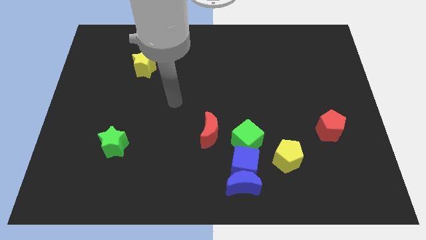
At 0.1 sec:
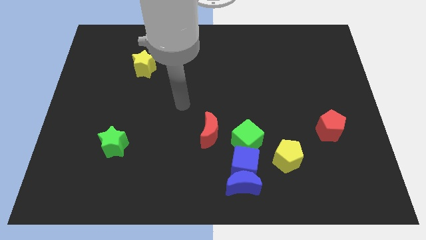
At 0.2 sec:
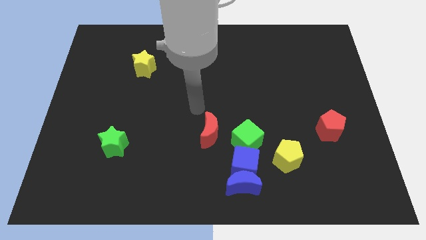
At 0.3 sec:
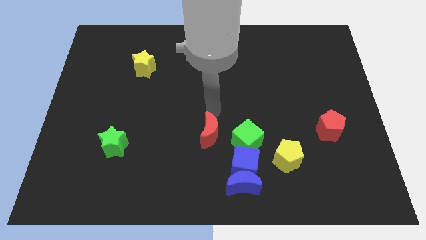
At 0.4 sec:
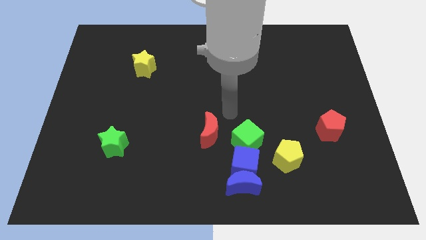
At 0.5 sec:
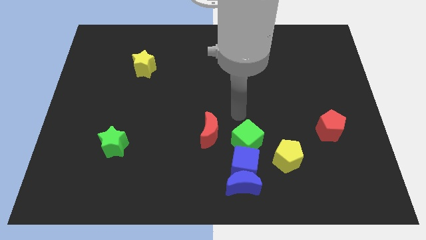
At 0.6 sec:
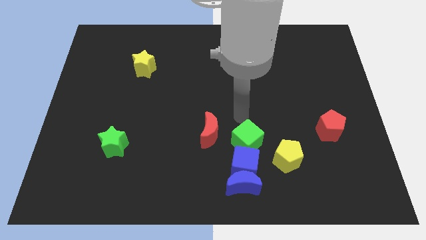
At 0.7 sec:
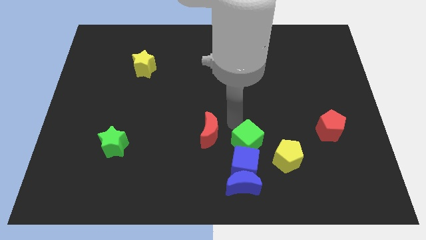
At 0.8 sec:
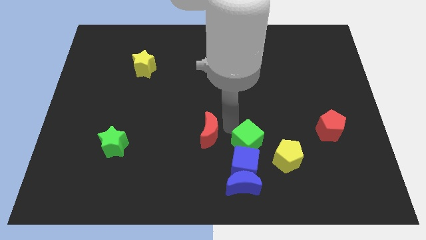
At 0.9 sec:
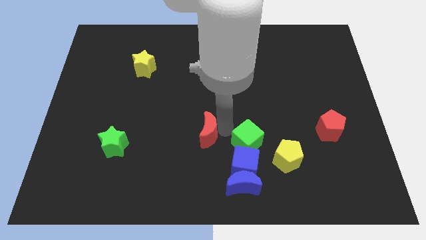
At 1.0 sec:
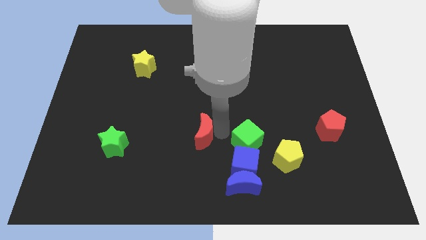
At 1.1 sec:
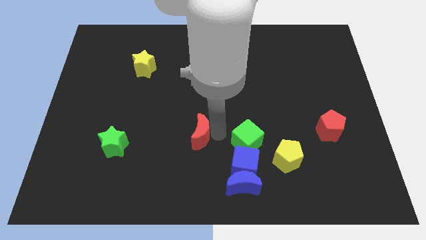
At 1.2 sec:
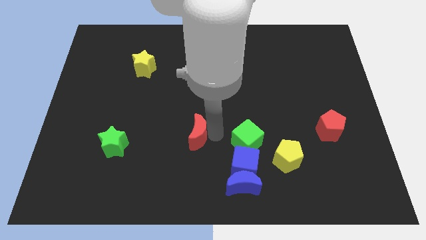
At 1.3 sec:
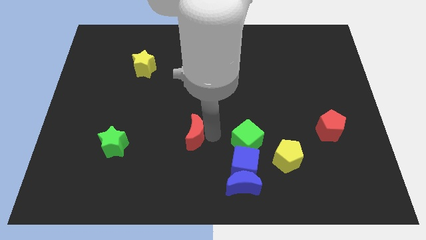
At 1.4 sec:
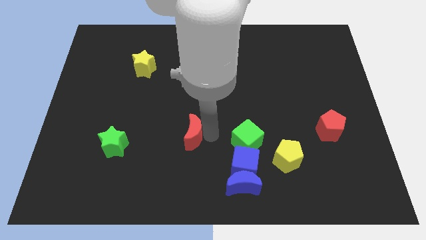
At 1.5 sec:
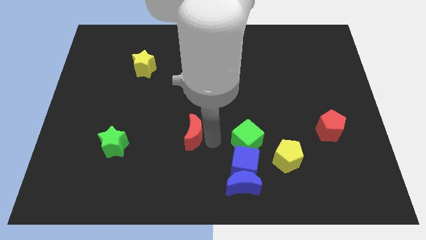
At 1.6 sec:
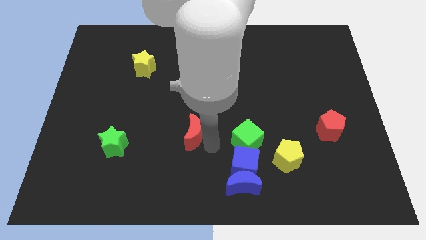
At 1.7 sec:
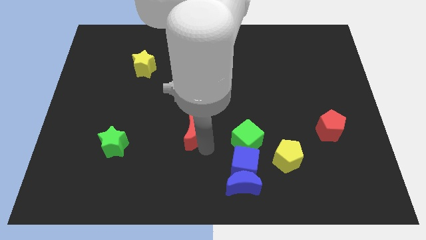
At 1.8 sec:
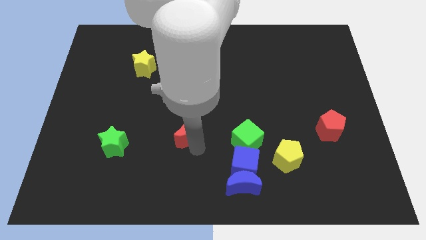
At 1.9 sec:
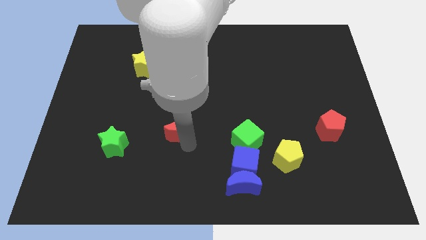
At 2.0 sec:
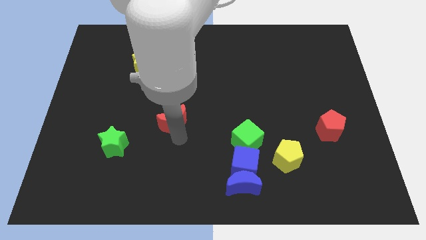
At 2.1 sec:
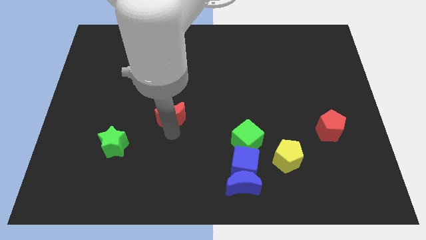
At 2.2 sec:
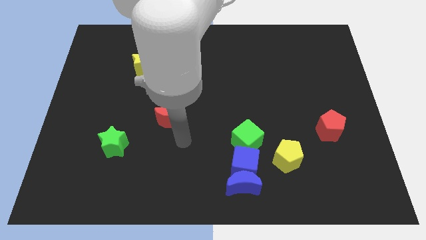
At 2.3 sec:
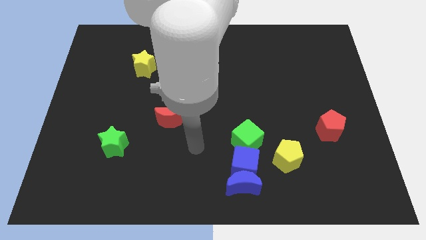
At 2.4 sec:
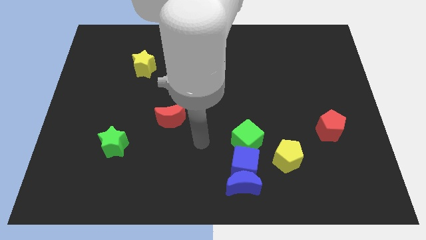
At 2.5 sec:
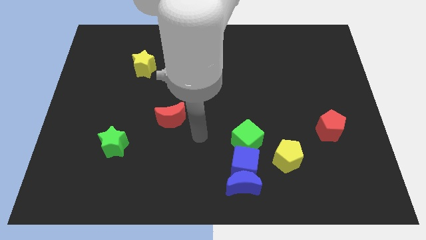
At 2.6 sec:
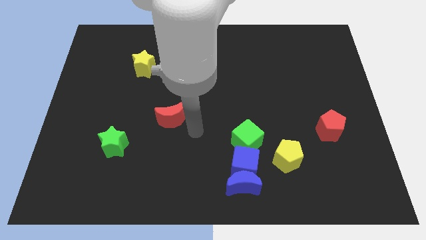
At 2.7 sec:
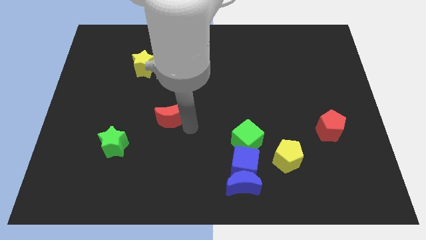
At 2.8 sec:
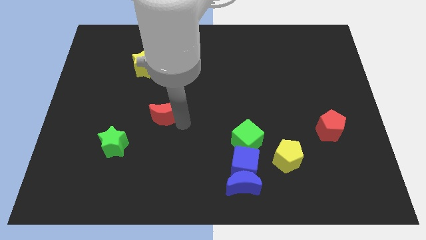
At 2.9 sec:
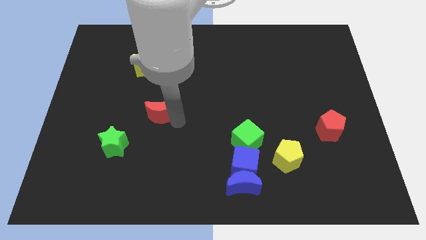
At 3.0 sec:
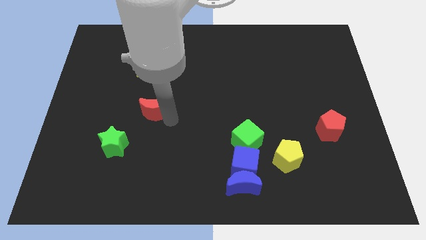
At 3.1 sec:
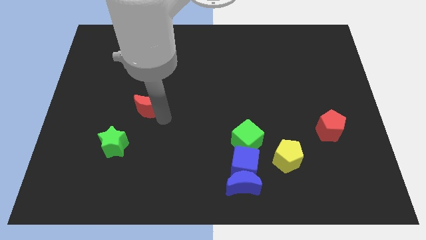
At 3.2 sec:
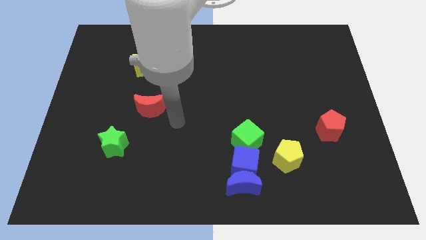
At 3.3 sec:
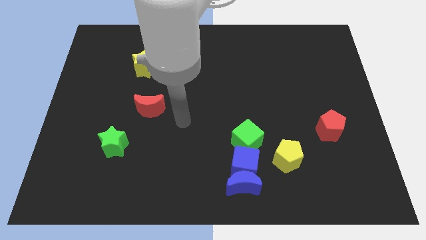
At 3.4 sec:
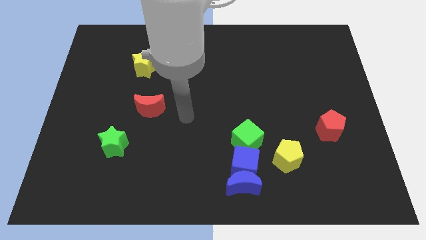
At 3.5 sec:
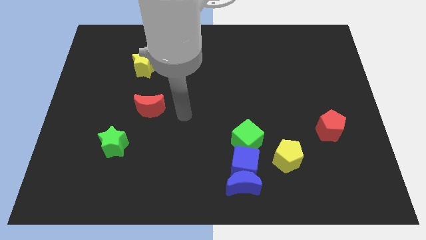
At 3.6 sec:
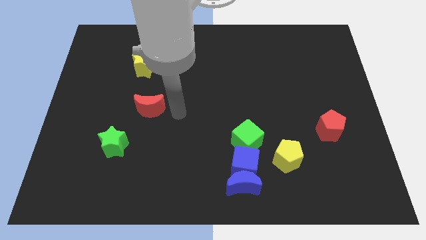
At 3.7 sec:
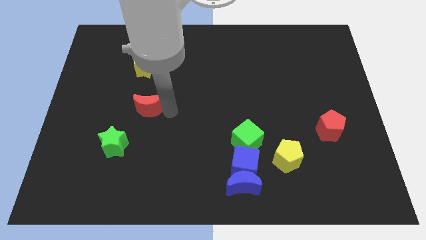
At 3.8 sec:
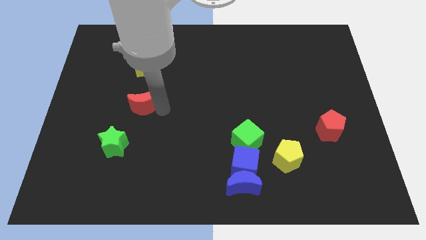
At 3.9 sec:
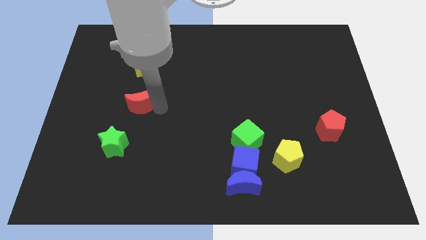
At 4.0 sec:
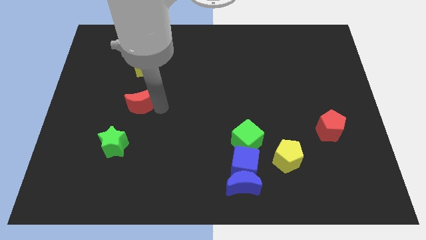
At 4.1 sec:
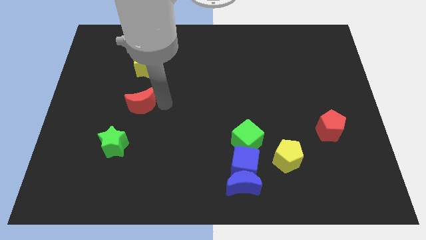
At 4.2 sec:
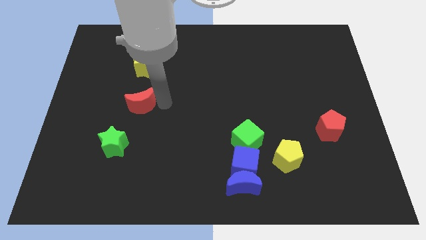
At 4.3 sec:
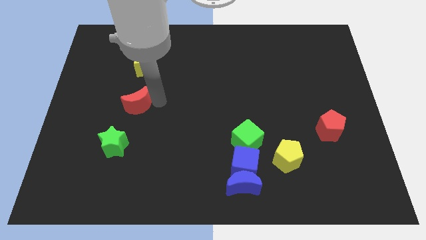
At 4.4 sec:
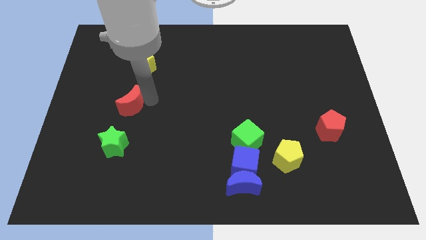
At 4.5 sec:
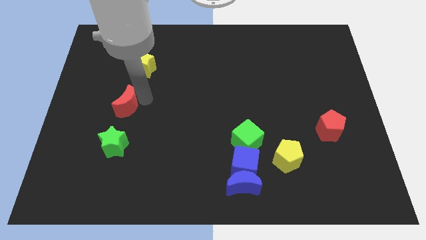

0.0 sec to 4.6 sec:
place the red moon in between yellow star and green star

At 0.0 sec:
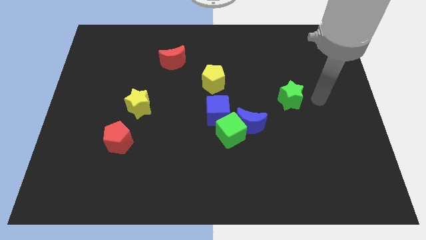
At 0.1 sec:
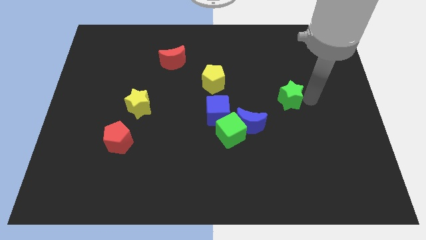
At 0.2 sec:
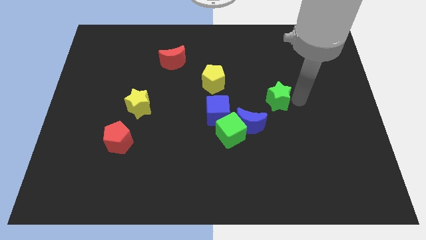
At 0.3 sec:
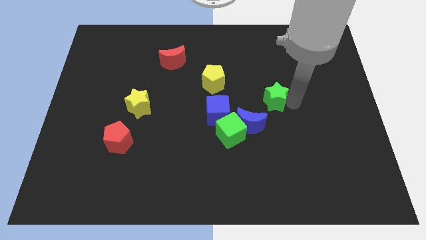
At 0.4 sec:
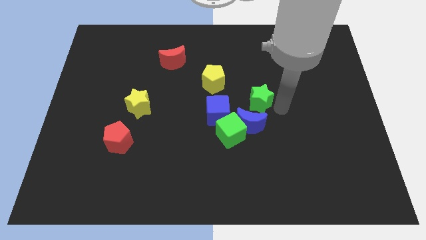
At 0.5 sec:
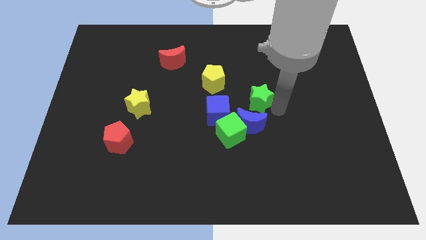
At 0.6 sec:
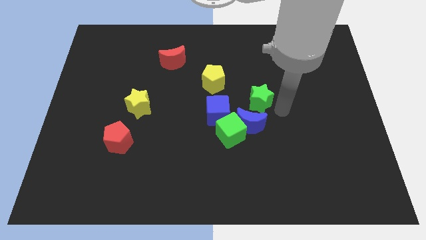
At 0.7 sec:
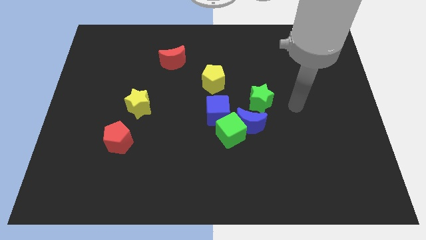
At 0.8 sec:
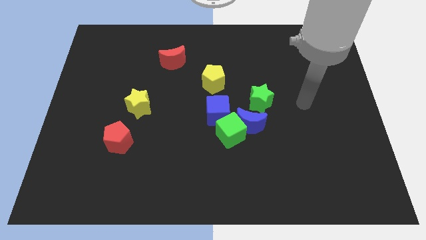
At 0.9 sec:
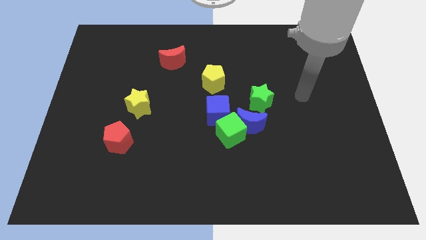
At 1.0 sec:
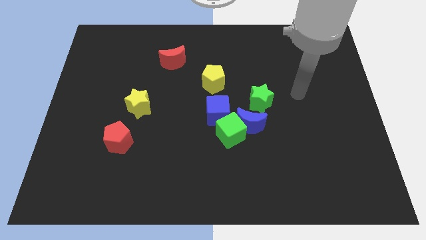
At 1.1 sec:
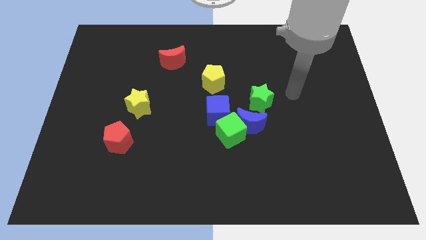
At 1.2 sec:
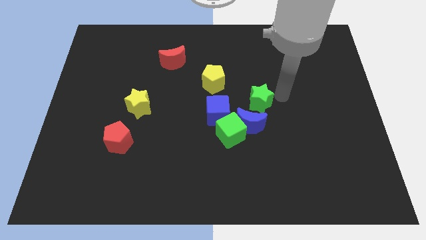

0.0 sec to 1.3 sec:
place the green star to the group of blocks

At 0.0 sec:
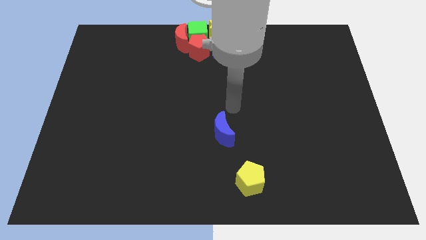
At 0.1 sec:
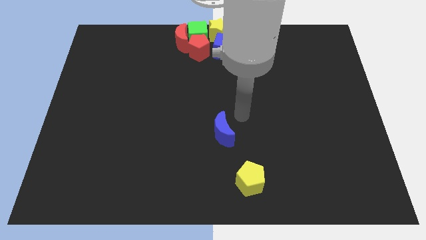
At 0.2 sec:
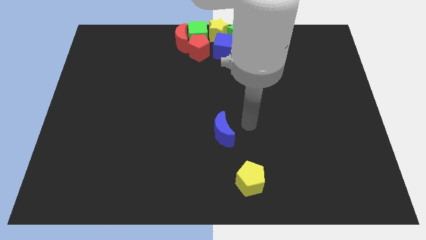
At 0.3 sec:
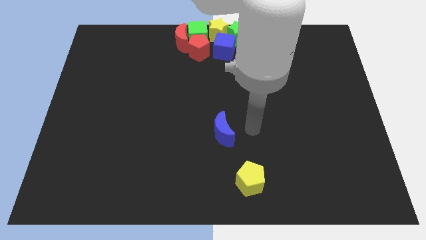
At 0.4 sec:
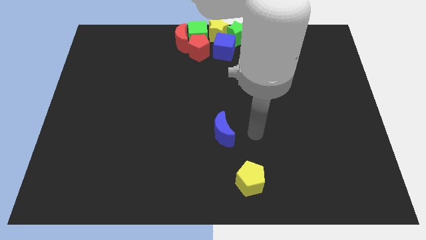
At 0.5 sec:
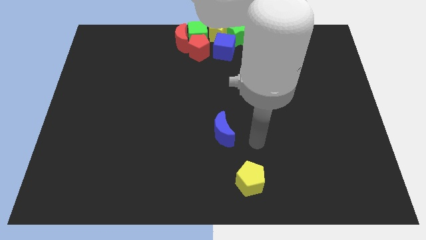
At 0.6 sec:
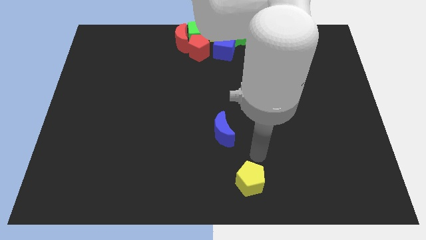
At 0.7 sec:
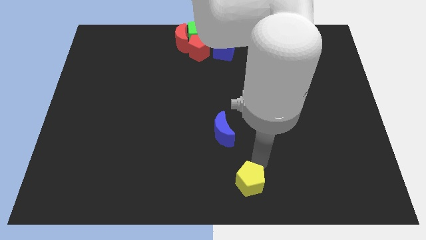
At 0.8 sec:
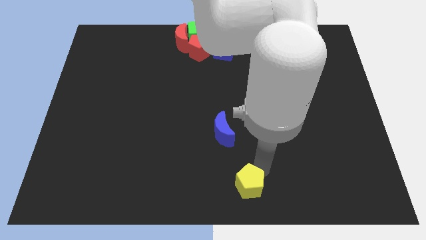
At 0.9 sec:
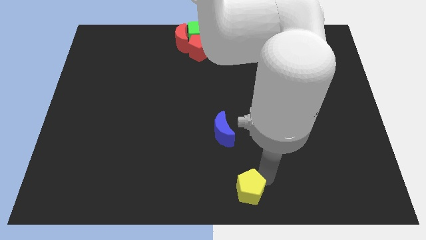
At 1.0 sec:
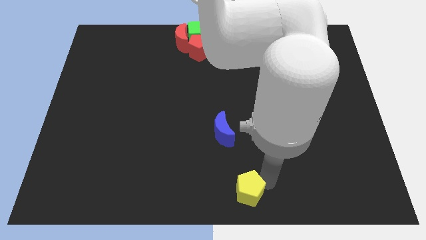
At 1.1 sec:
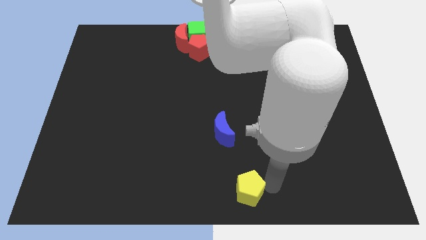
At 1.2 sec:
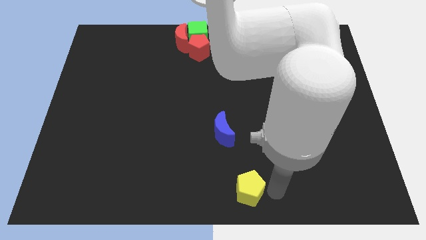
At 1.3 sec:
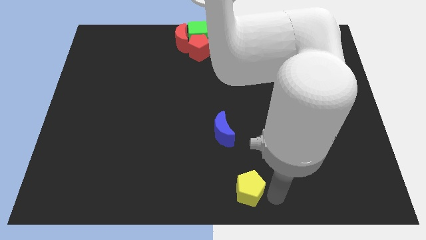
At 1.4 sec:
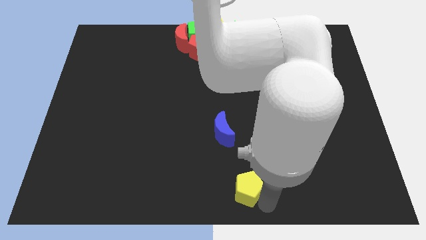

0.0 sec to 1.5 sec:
slide the yellow pentagon diagonally on the bottom right side of the blue crescent

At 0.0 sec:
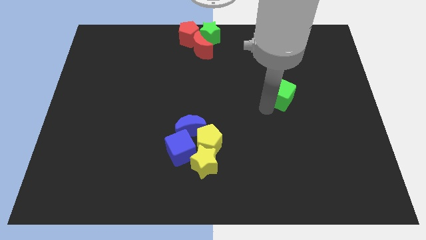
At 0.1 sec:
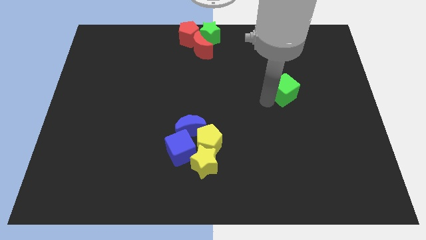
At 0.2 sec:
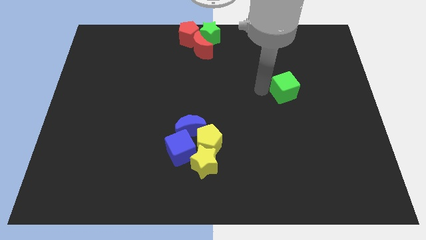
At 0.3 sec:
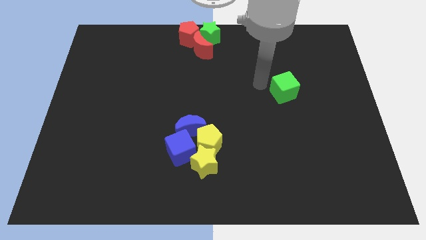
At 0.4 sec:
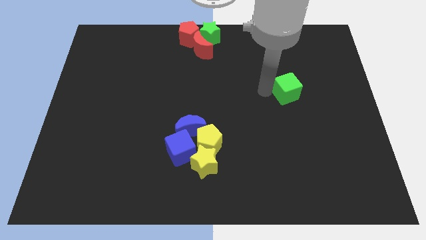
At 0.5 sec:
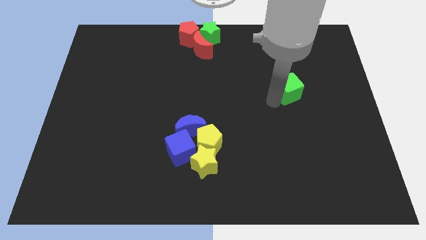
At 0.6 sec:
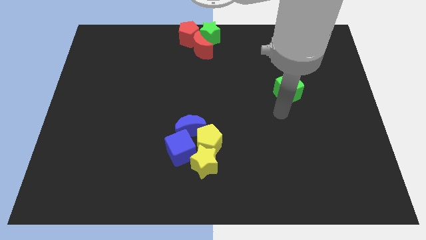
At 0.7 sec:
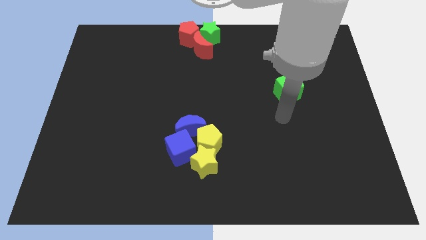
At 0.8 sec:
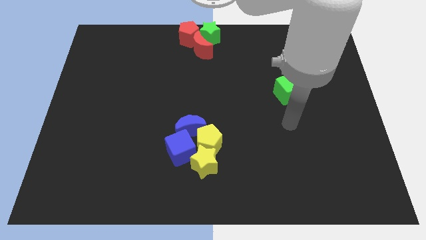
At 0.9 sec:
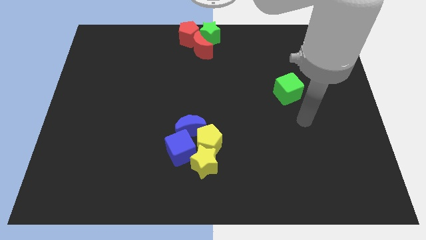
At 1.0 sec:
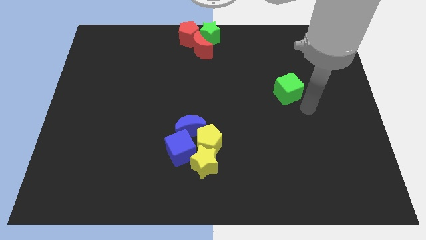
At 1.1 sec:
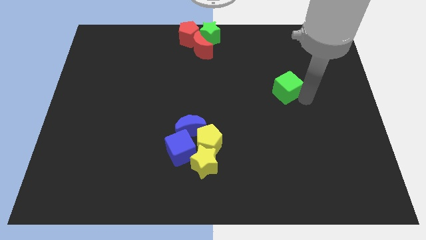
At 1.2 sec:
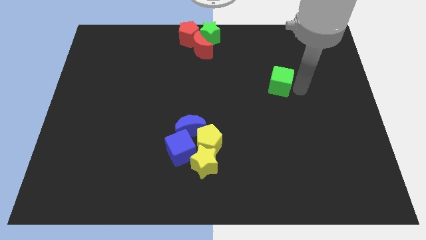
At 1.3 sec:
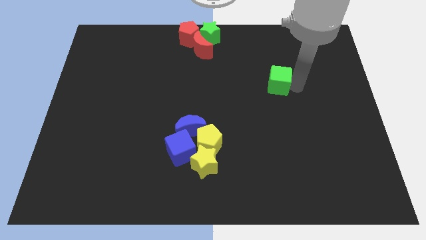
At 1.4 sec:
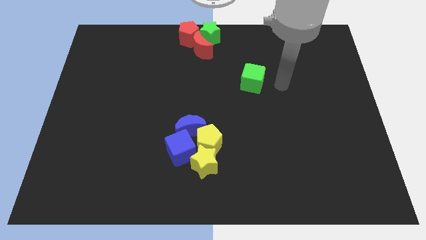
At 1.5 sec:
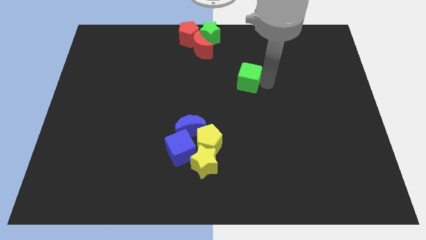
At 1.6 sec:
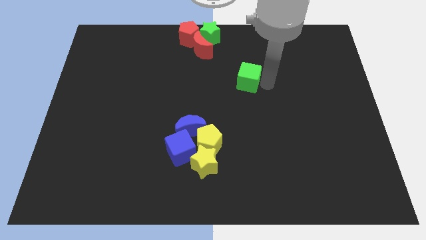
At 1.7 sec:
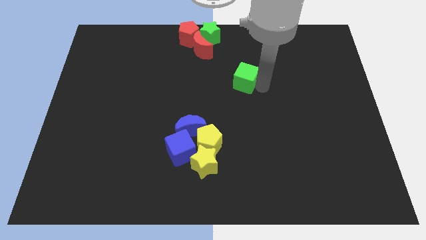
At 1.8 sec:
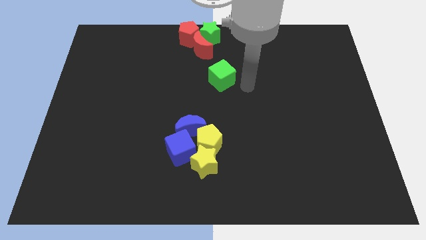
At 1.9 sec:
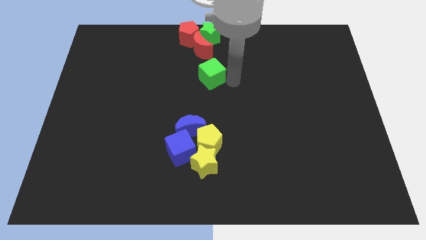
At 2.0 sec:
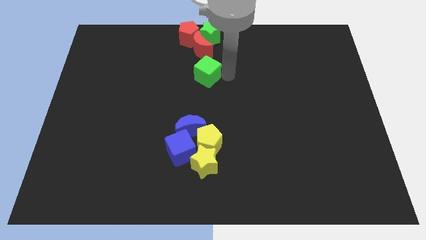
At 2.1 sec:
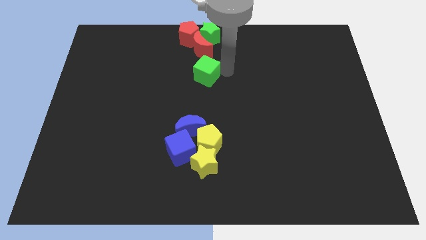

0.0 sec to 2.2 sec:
push green cube below red crescent
